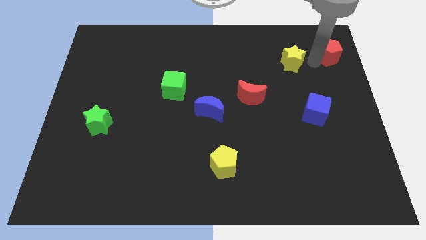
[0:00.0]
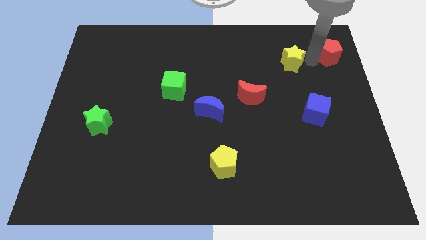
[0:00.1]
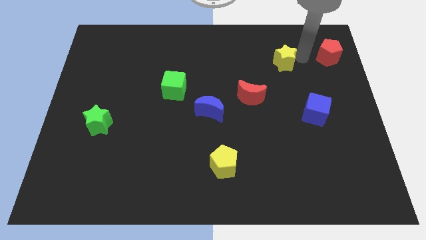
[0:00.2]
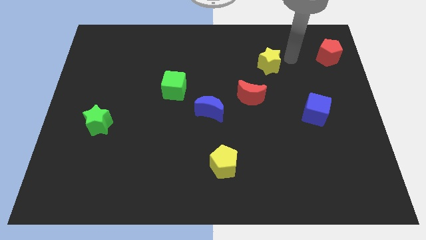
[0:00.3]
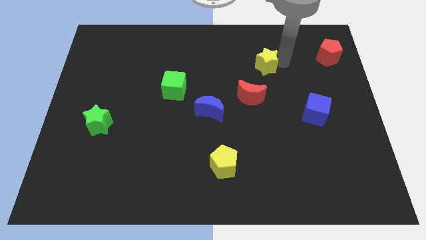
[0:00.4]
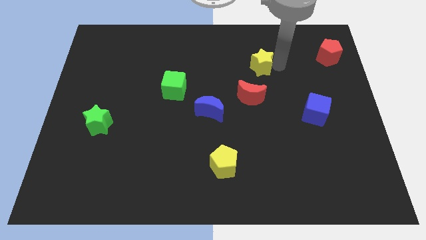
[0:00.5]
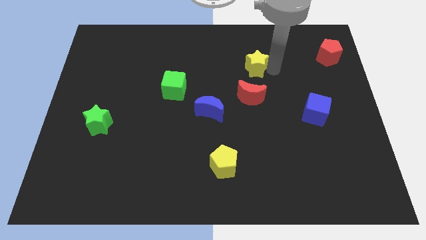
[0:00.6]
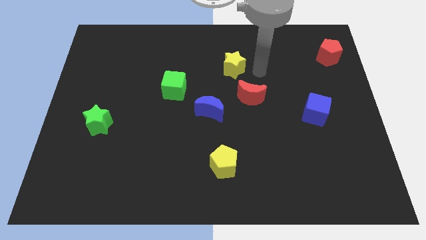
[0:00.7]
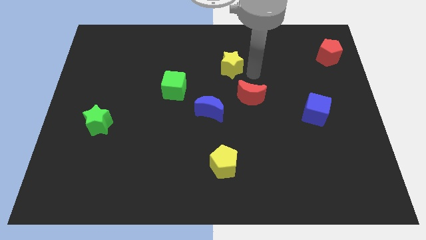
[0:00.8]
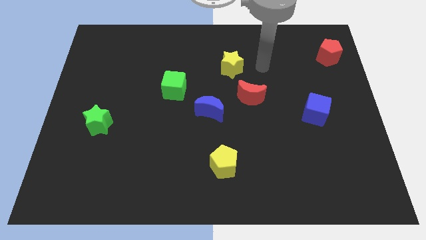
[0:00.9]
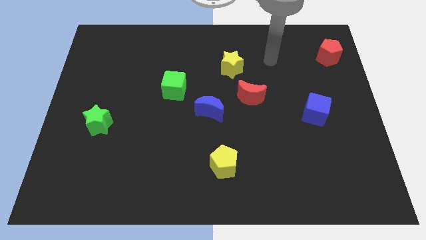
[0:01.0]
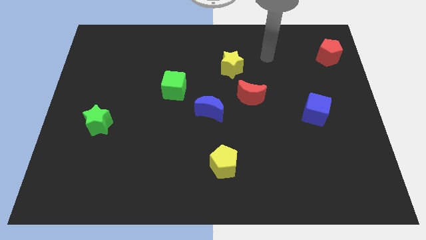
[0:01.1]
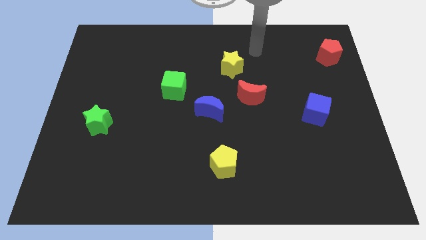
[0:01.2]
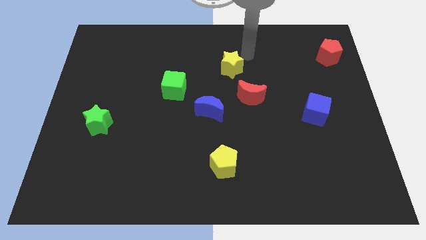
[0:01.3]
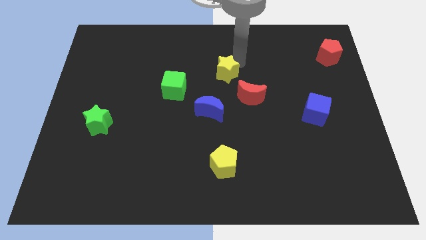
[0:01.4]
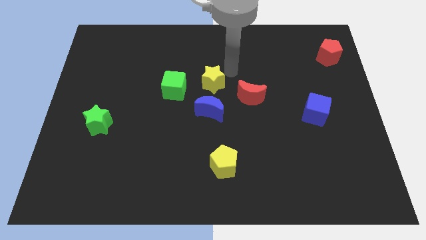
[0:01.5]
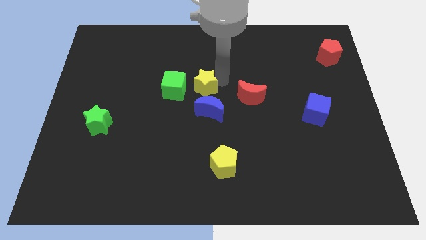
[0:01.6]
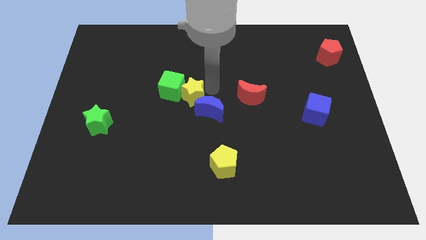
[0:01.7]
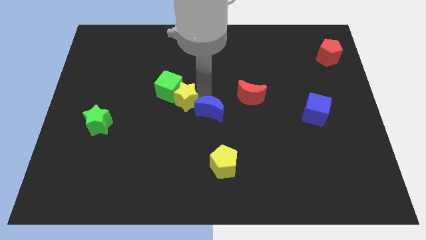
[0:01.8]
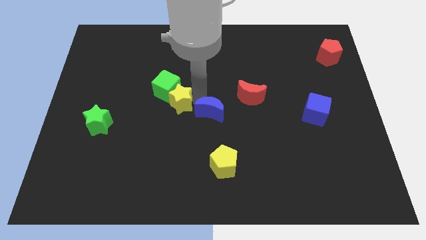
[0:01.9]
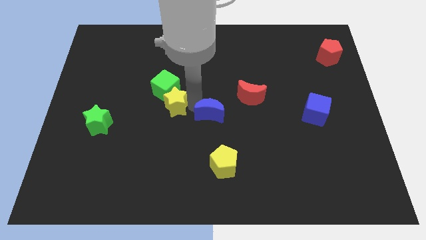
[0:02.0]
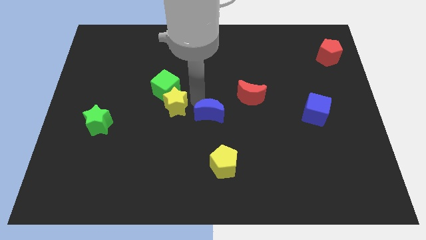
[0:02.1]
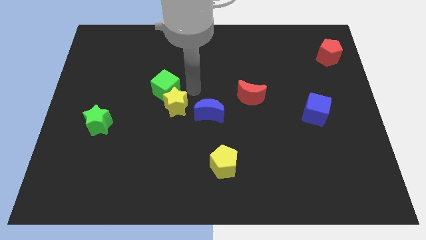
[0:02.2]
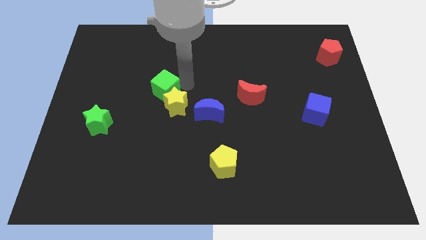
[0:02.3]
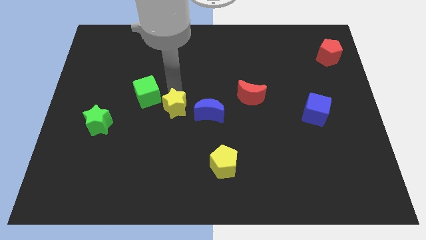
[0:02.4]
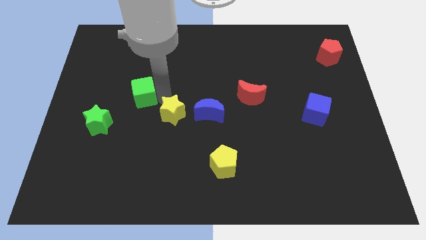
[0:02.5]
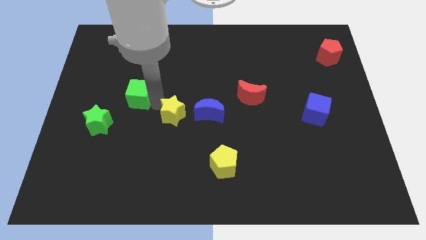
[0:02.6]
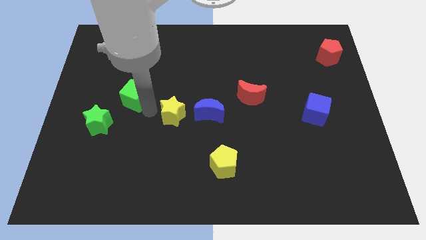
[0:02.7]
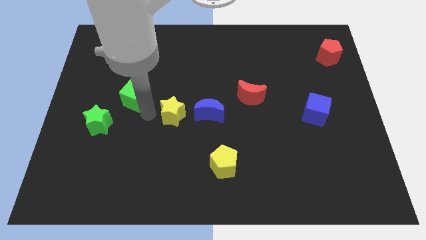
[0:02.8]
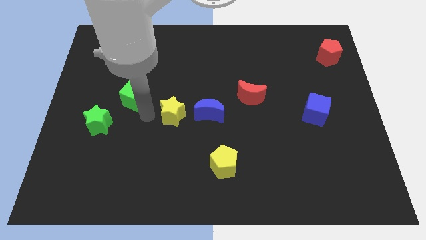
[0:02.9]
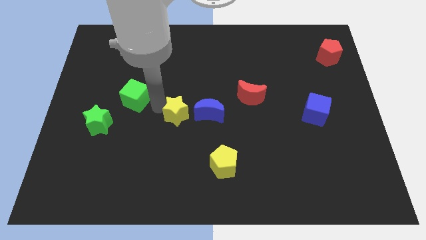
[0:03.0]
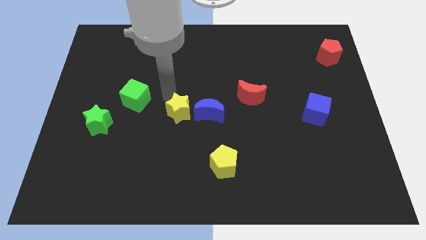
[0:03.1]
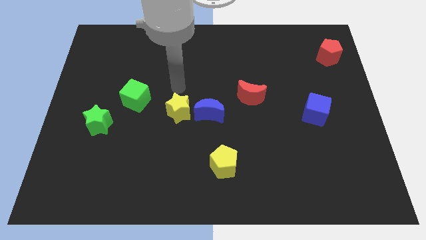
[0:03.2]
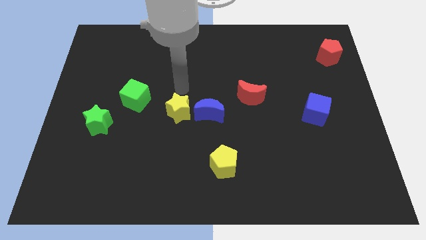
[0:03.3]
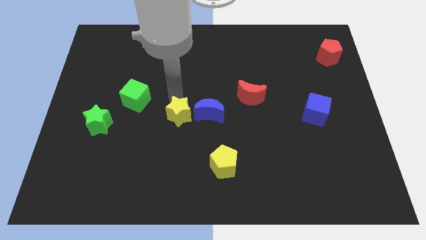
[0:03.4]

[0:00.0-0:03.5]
push the yellow star to the left of the blue crescent

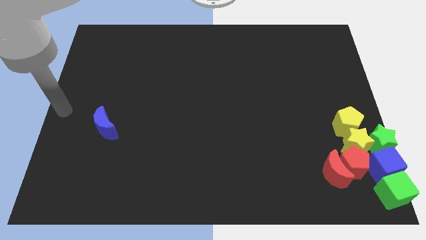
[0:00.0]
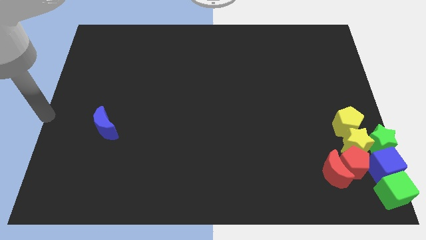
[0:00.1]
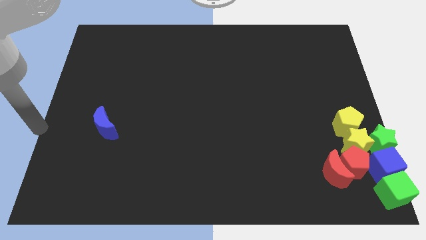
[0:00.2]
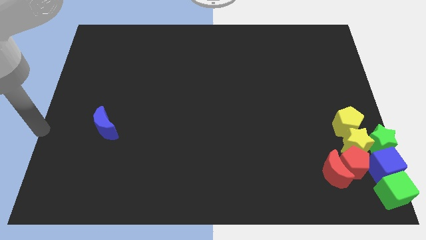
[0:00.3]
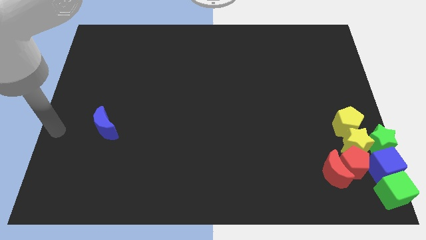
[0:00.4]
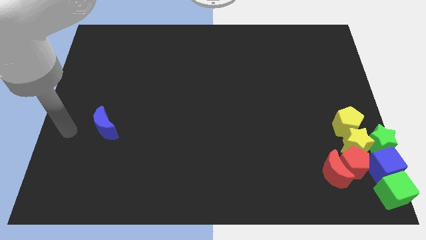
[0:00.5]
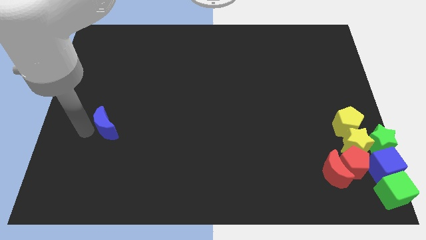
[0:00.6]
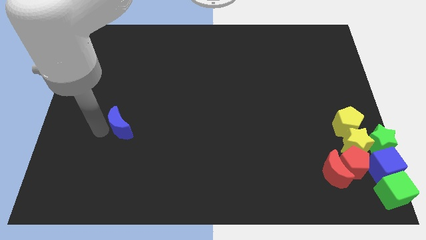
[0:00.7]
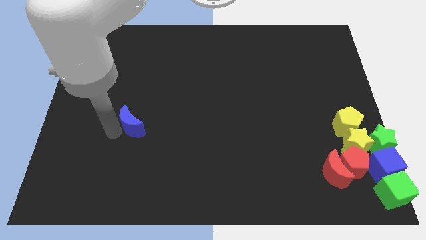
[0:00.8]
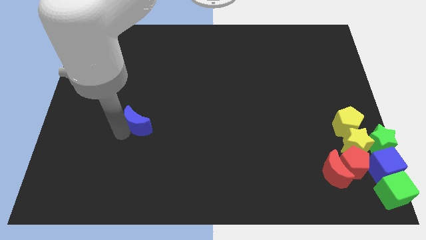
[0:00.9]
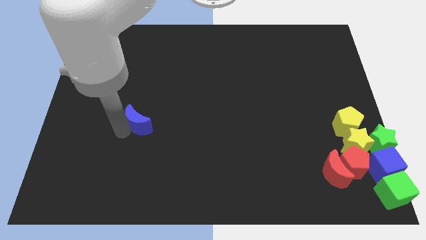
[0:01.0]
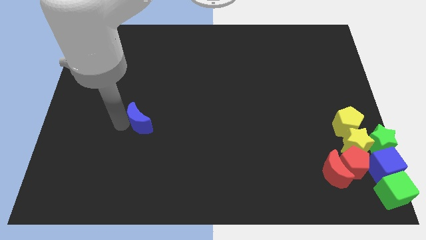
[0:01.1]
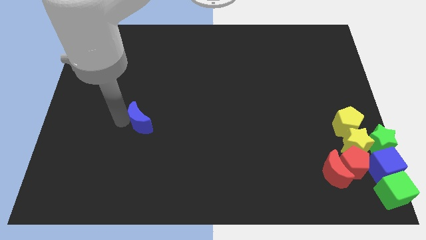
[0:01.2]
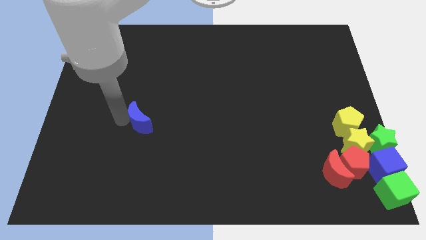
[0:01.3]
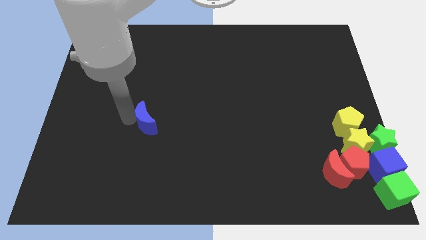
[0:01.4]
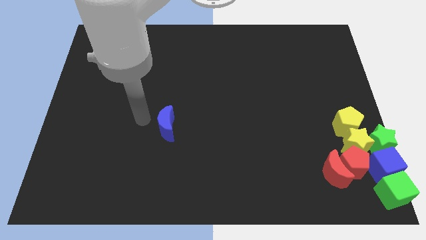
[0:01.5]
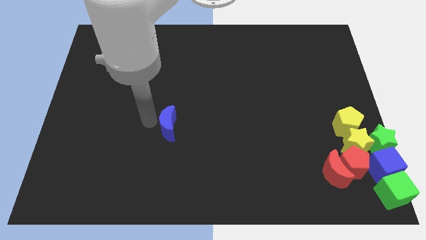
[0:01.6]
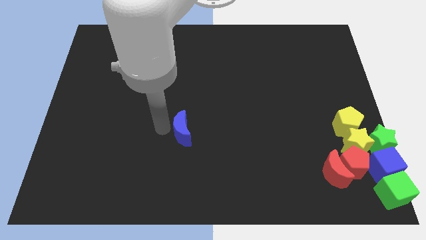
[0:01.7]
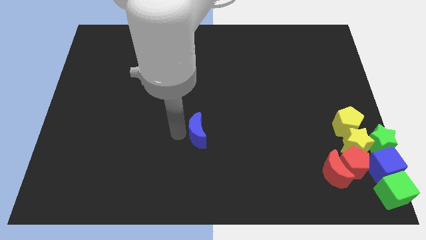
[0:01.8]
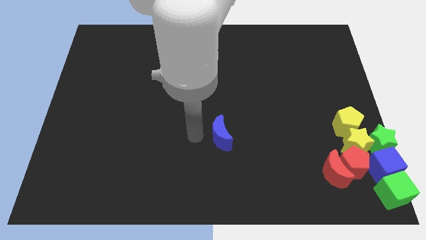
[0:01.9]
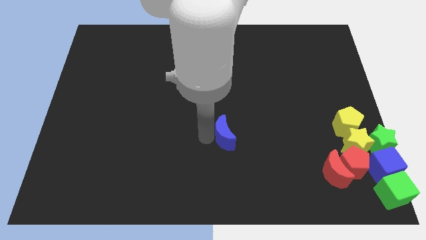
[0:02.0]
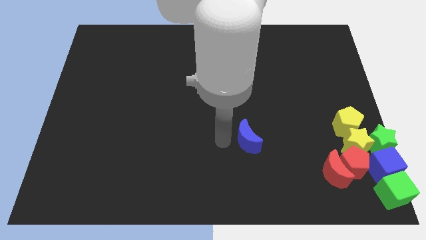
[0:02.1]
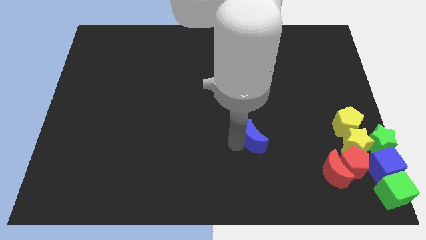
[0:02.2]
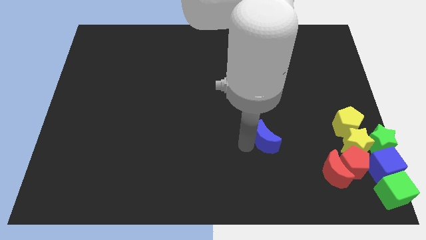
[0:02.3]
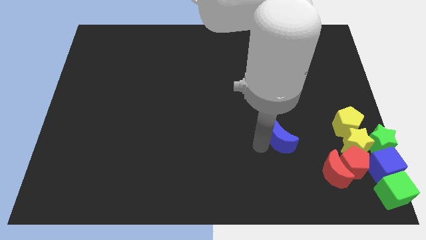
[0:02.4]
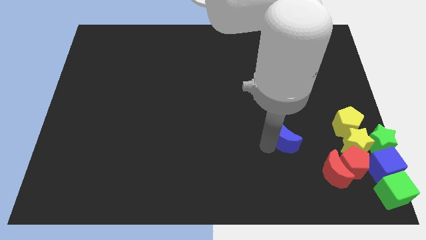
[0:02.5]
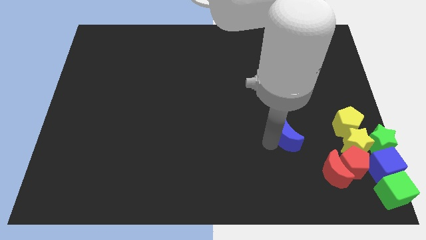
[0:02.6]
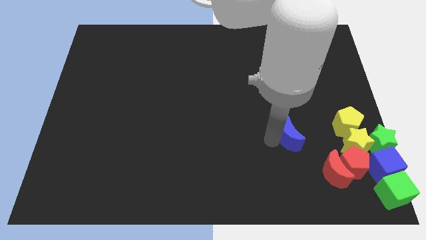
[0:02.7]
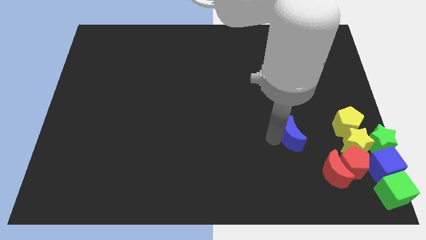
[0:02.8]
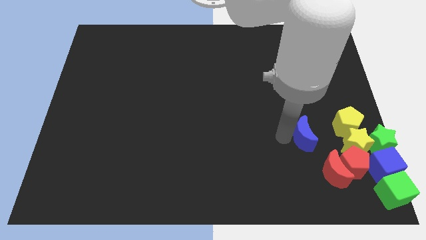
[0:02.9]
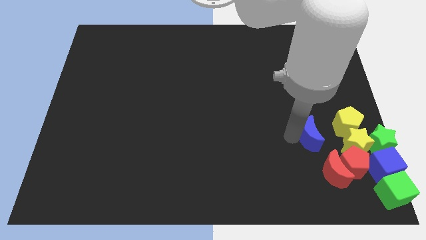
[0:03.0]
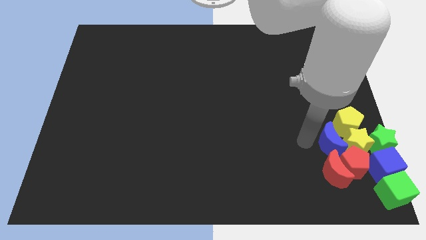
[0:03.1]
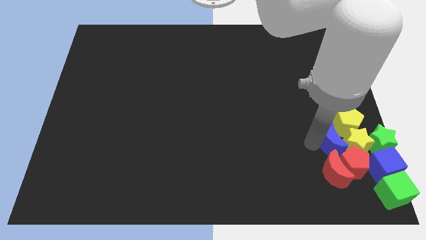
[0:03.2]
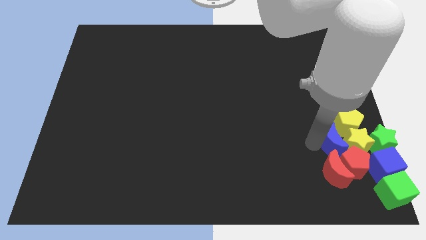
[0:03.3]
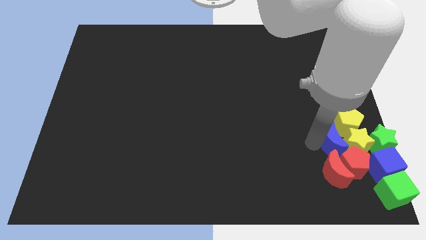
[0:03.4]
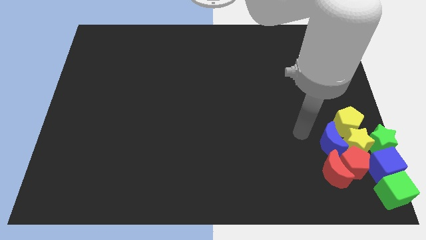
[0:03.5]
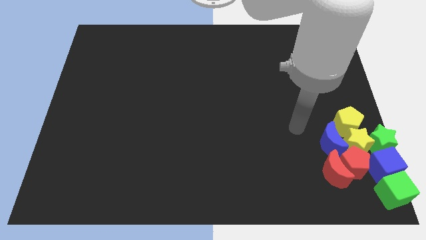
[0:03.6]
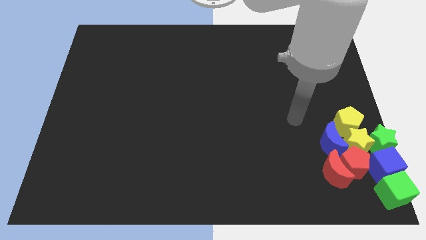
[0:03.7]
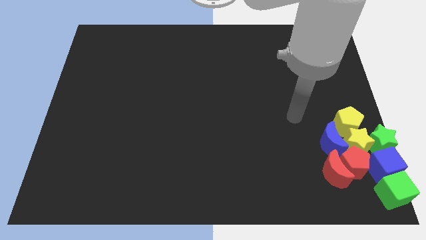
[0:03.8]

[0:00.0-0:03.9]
move the blue crescent to the left of the yellow star

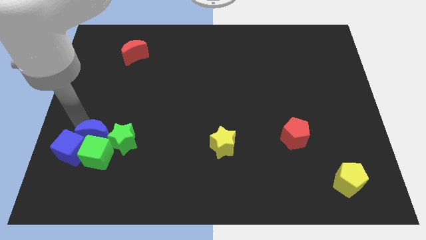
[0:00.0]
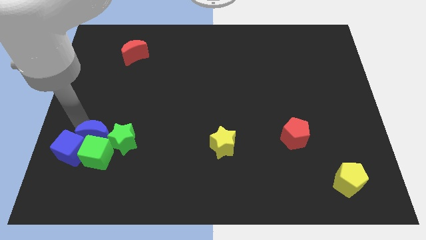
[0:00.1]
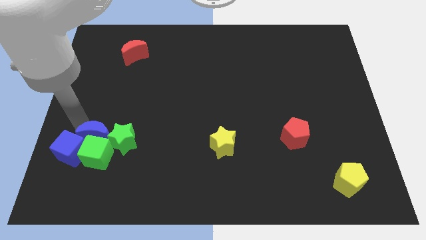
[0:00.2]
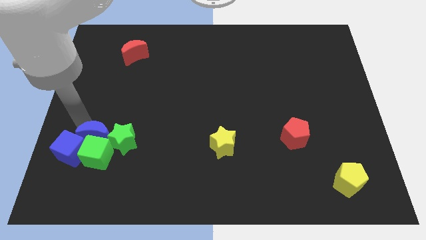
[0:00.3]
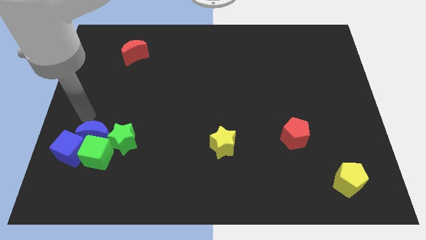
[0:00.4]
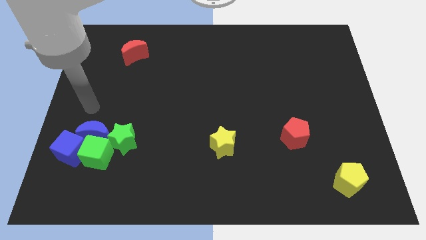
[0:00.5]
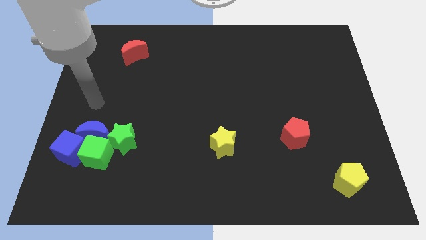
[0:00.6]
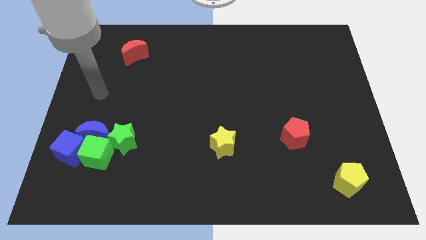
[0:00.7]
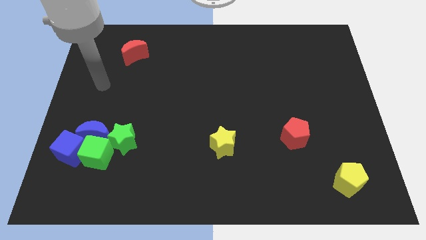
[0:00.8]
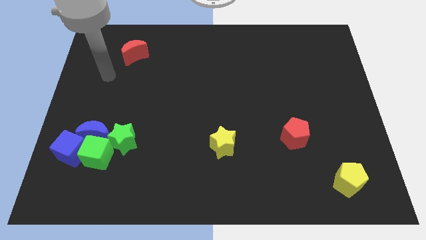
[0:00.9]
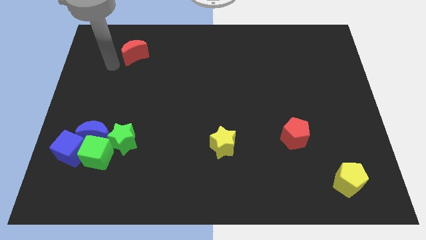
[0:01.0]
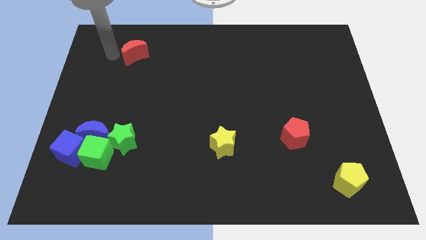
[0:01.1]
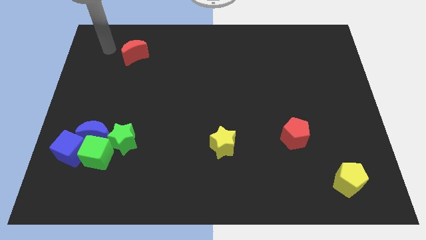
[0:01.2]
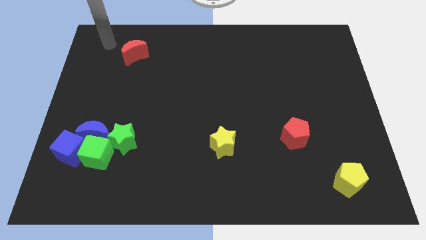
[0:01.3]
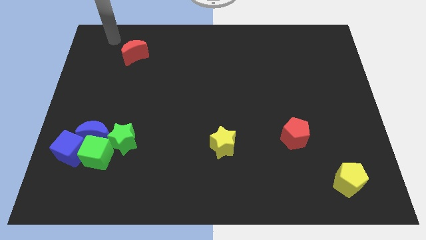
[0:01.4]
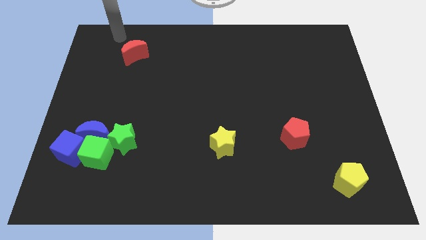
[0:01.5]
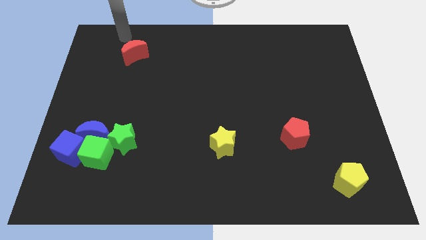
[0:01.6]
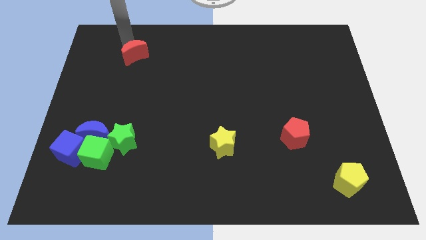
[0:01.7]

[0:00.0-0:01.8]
point your arm diagonal above red moon
